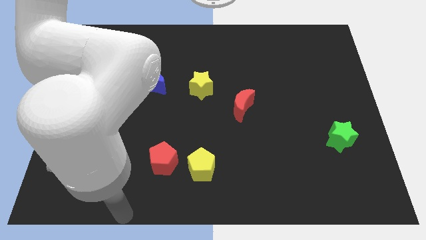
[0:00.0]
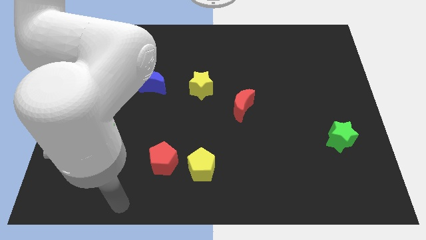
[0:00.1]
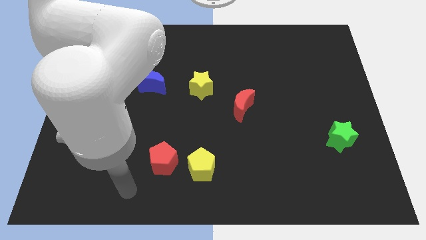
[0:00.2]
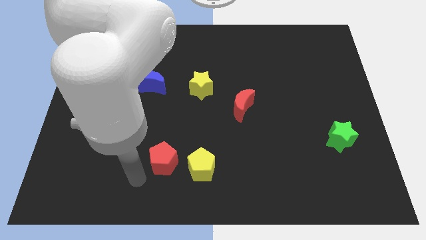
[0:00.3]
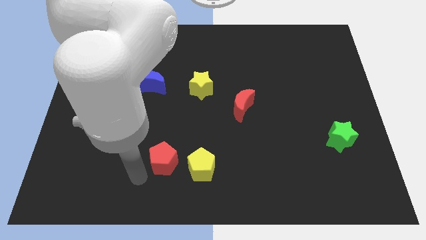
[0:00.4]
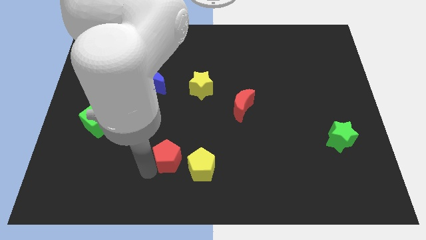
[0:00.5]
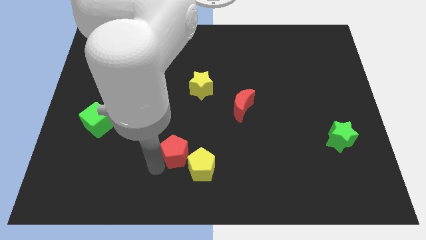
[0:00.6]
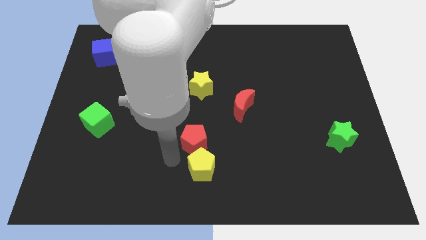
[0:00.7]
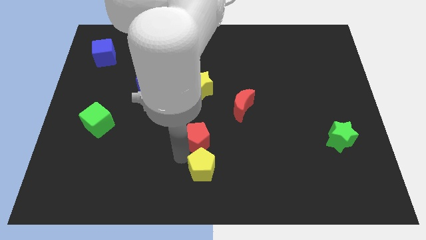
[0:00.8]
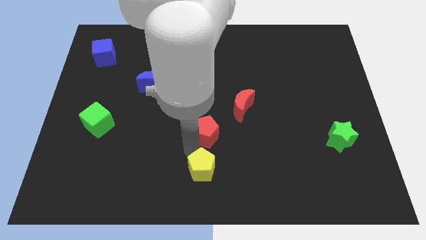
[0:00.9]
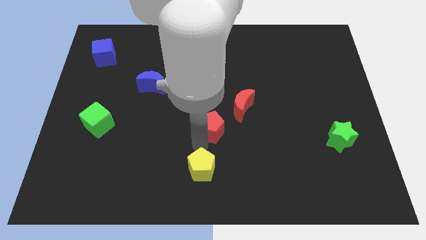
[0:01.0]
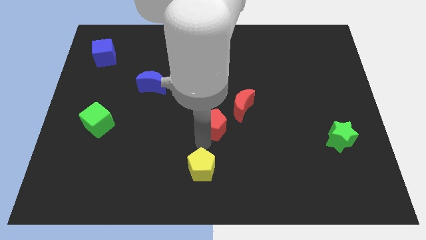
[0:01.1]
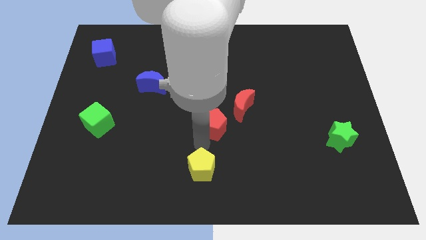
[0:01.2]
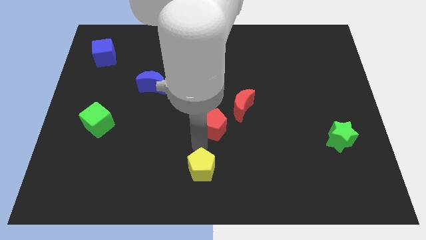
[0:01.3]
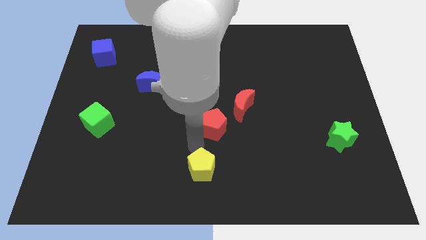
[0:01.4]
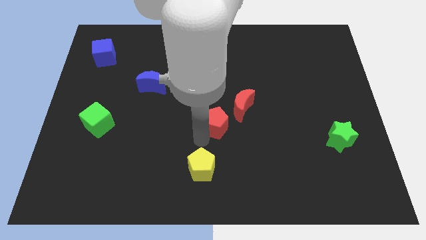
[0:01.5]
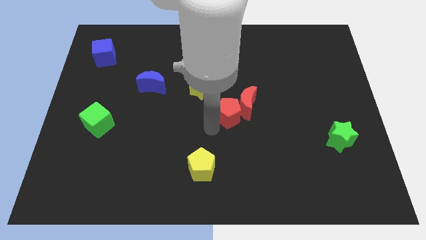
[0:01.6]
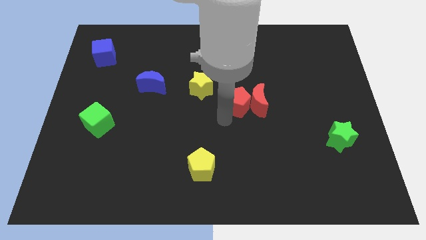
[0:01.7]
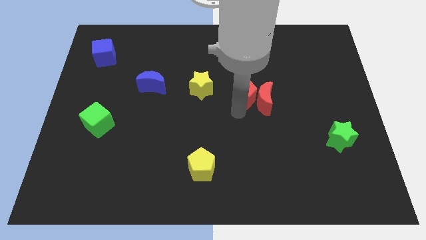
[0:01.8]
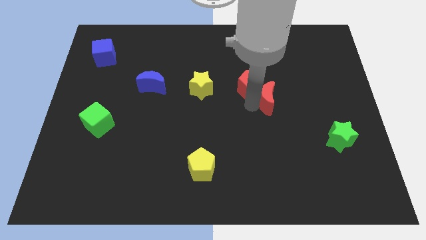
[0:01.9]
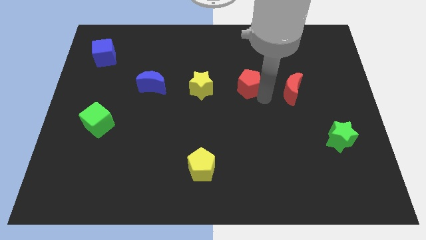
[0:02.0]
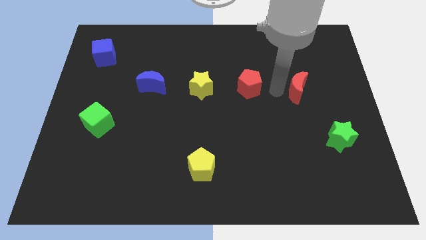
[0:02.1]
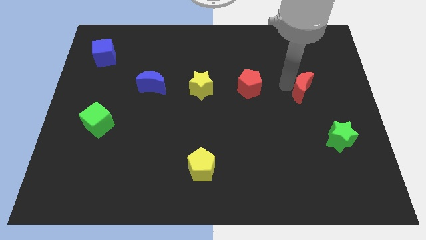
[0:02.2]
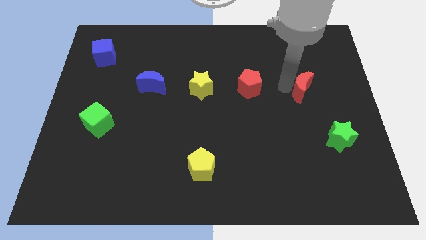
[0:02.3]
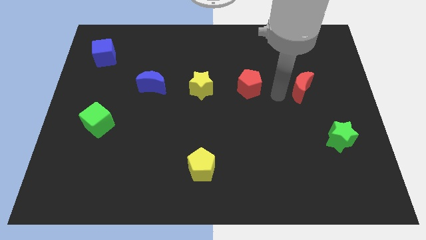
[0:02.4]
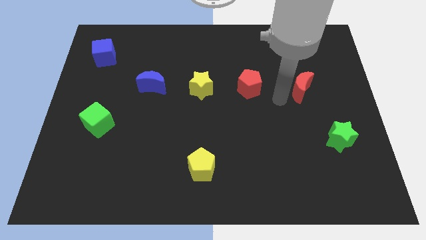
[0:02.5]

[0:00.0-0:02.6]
push the red pentagon into the red crescent

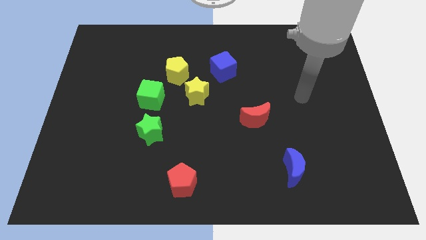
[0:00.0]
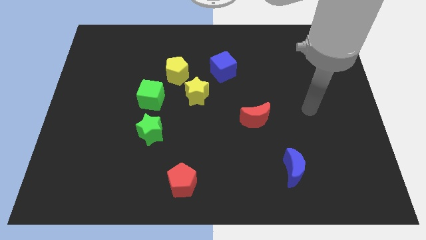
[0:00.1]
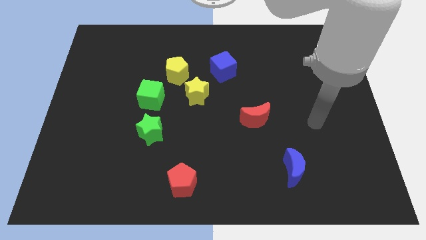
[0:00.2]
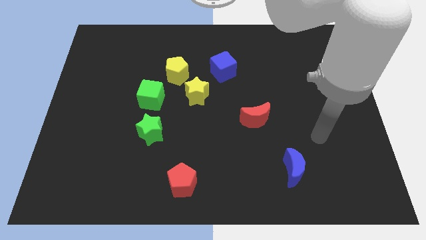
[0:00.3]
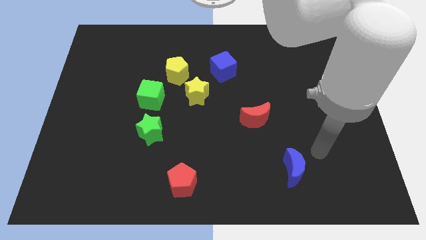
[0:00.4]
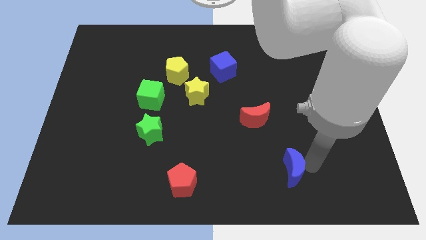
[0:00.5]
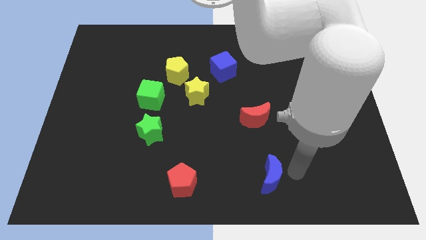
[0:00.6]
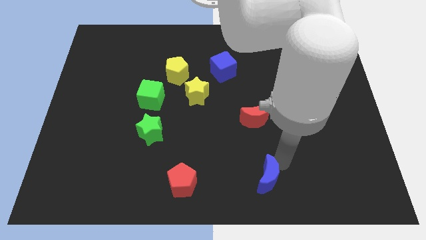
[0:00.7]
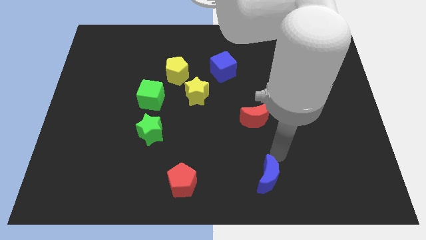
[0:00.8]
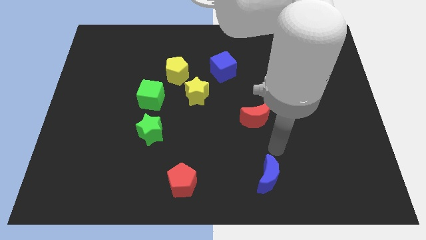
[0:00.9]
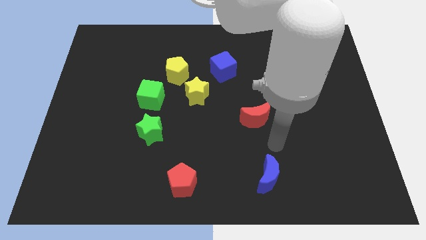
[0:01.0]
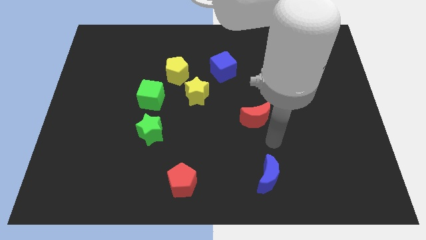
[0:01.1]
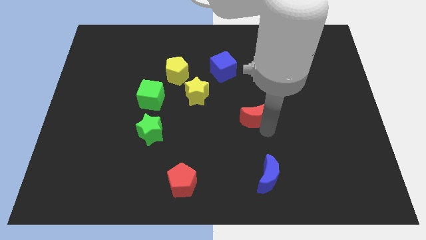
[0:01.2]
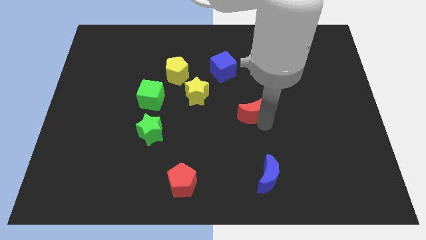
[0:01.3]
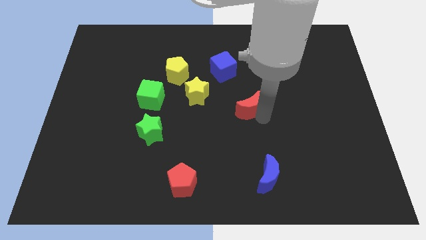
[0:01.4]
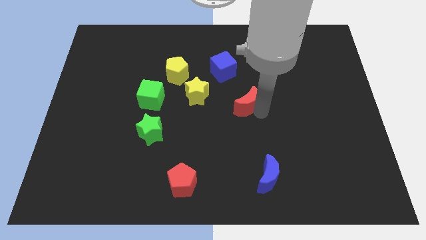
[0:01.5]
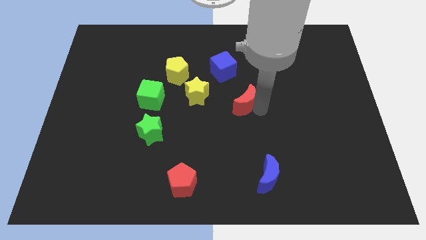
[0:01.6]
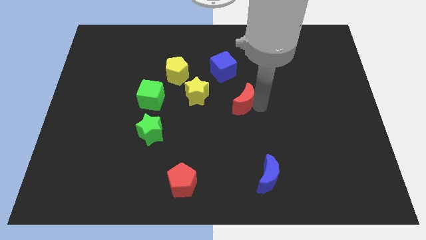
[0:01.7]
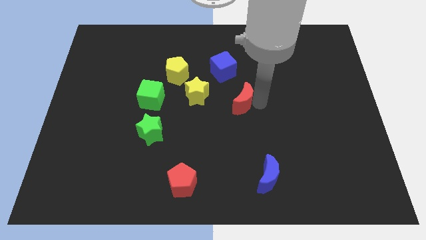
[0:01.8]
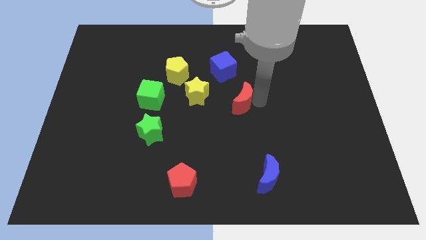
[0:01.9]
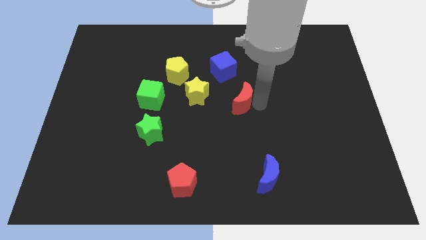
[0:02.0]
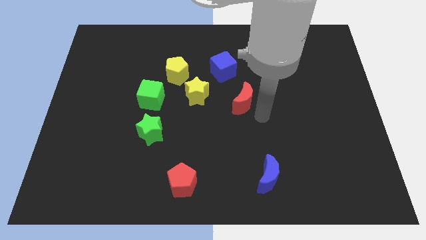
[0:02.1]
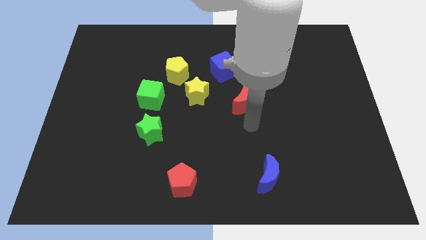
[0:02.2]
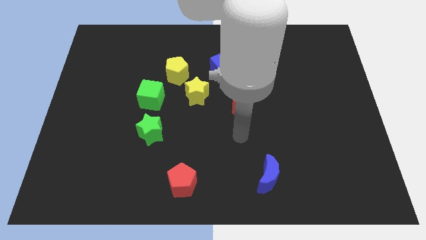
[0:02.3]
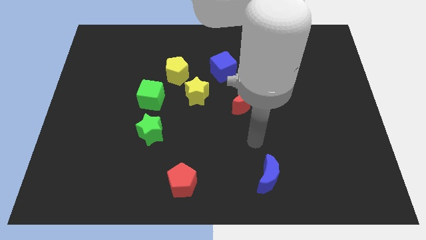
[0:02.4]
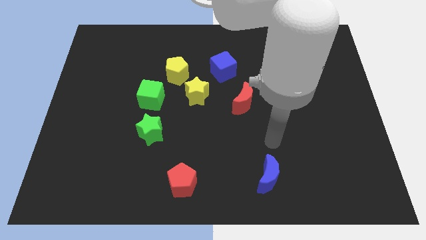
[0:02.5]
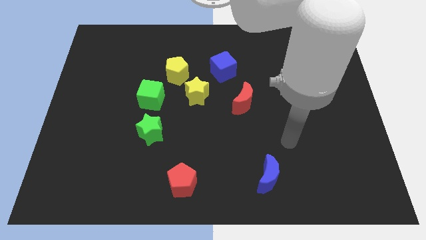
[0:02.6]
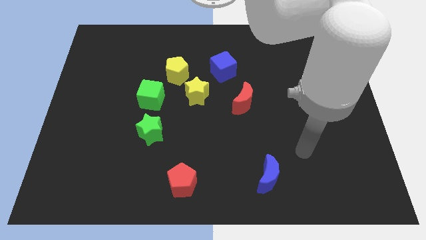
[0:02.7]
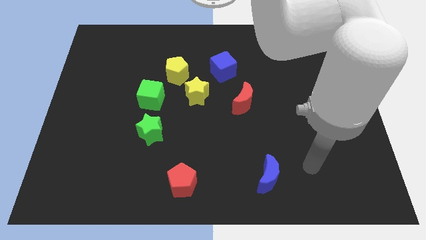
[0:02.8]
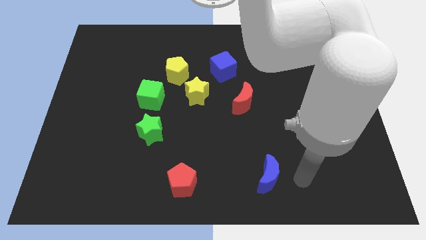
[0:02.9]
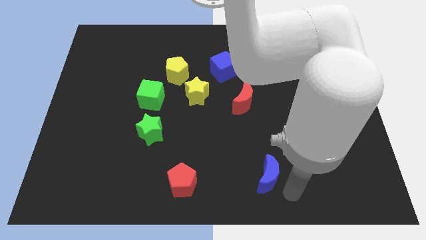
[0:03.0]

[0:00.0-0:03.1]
push the red moon towards the center of the board

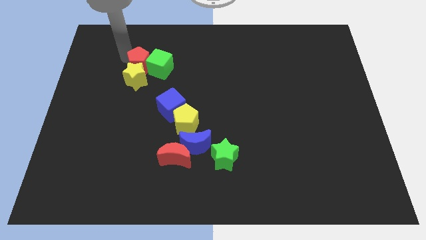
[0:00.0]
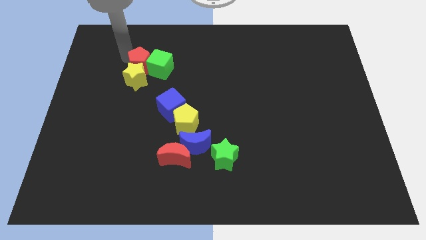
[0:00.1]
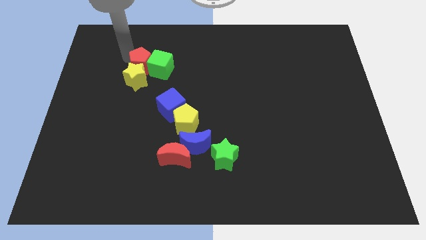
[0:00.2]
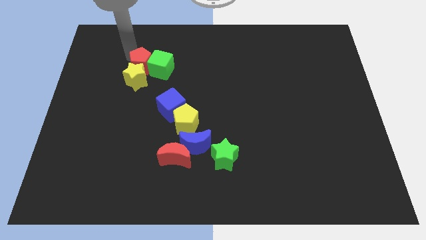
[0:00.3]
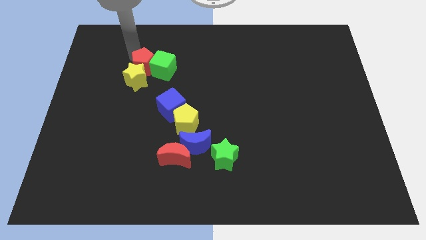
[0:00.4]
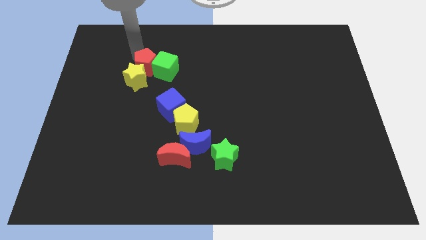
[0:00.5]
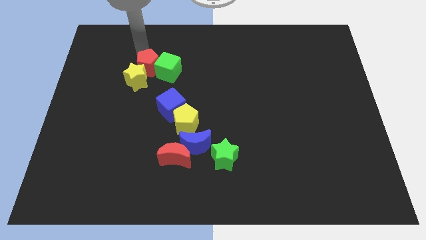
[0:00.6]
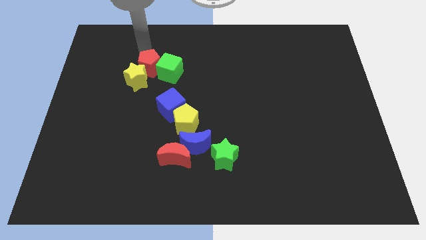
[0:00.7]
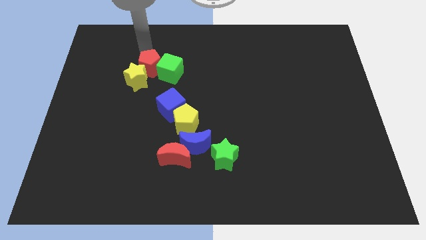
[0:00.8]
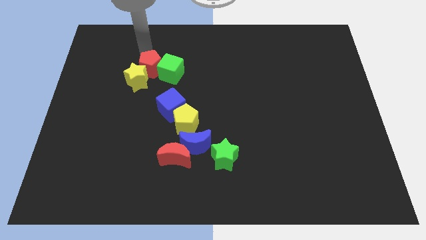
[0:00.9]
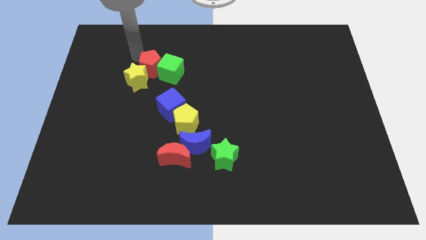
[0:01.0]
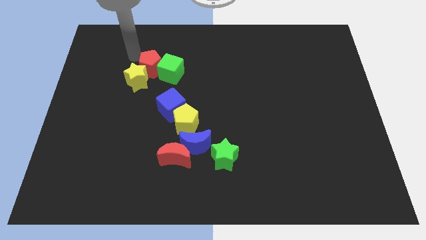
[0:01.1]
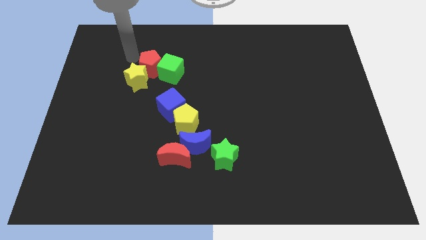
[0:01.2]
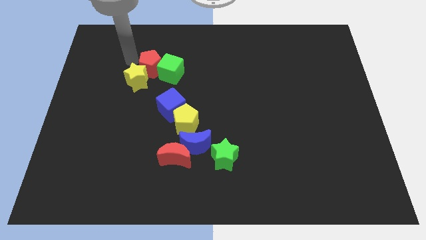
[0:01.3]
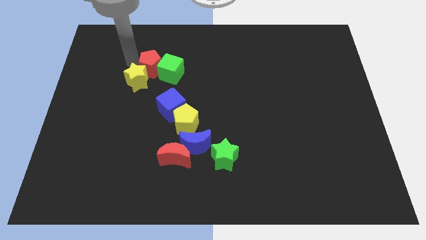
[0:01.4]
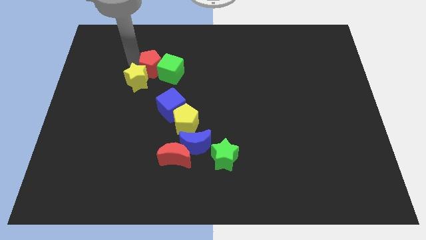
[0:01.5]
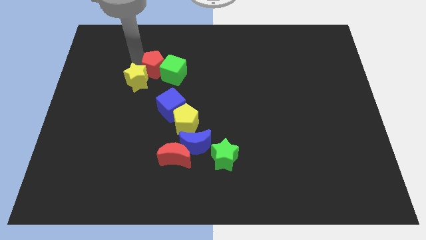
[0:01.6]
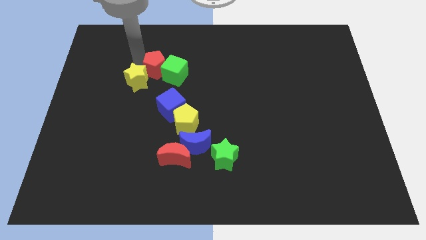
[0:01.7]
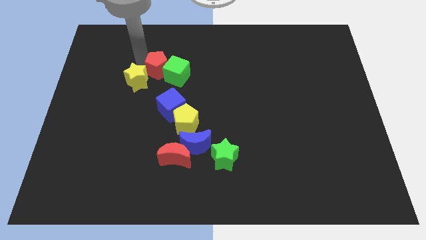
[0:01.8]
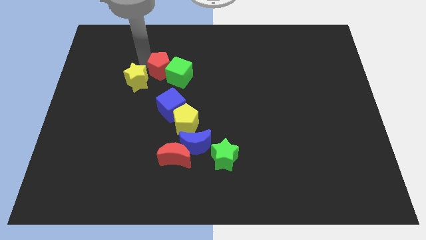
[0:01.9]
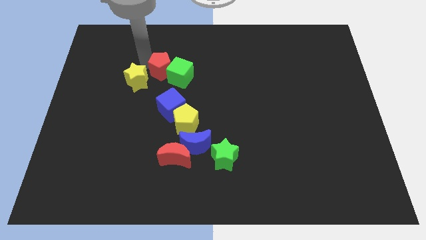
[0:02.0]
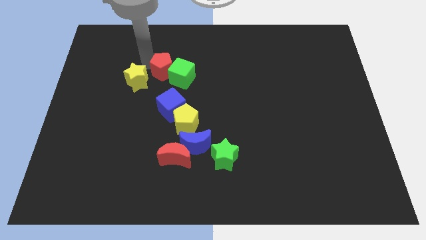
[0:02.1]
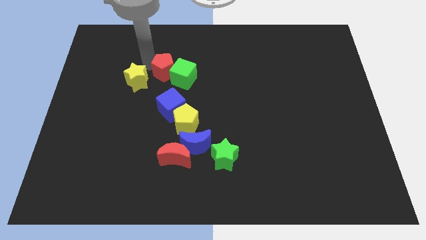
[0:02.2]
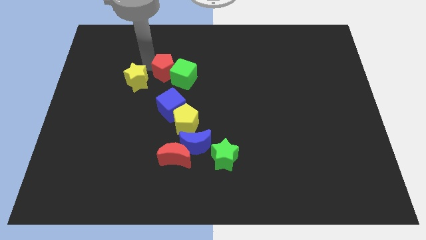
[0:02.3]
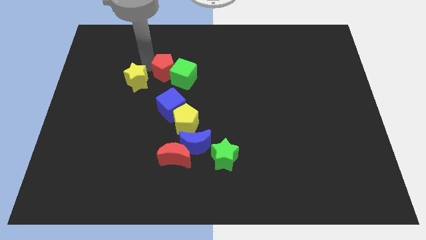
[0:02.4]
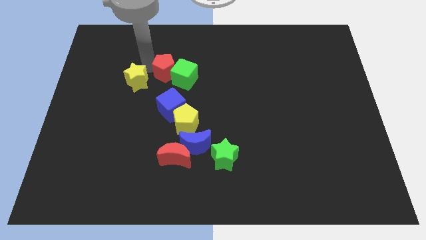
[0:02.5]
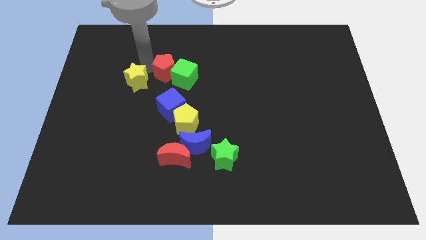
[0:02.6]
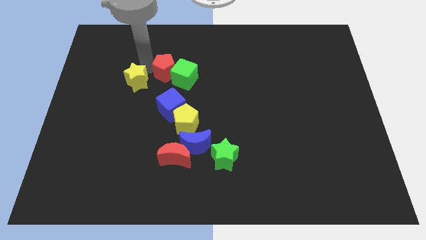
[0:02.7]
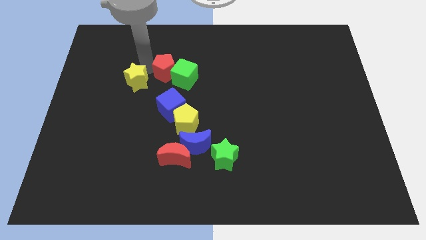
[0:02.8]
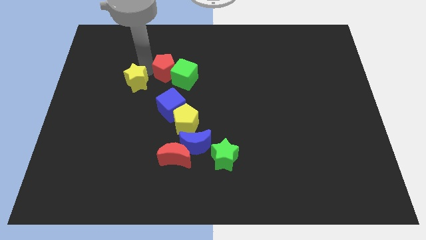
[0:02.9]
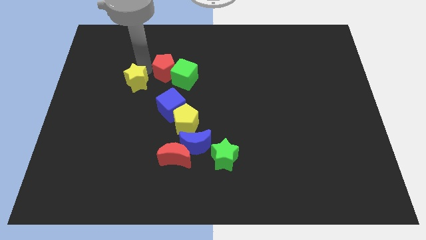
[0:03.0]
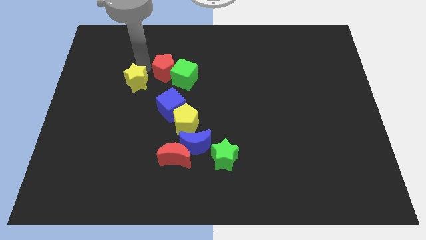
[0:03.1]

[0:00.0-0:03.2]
push red pentagon to the right
